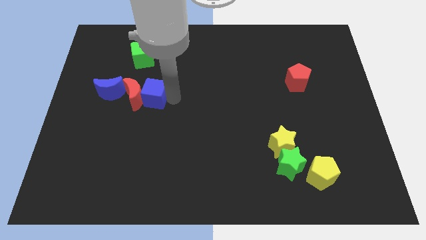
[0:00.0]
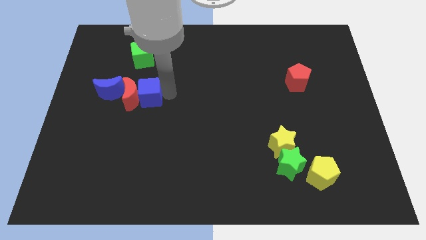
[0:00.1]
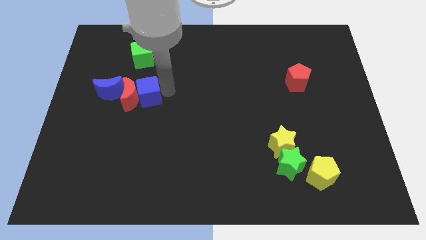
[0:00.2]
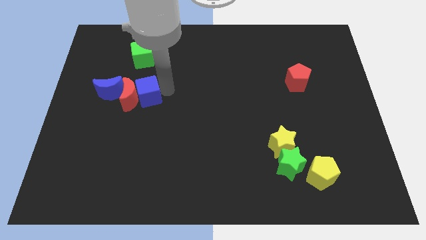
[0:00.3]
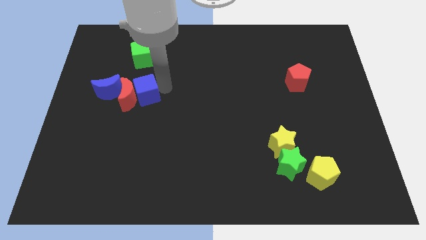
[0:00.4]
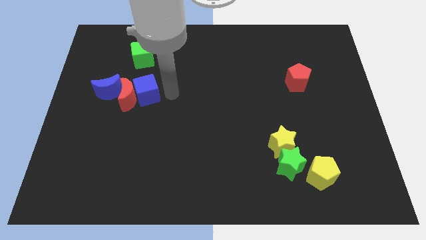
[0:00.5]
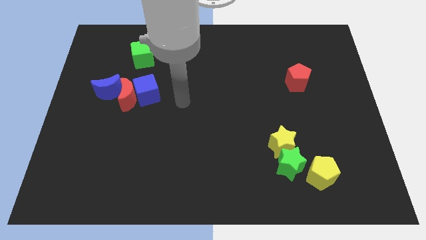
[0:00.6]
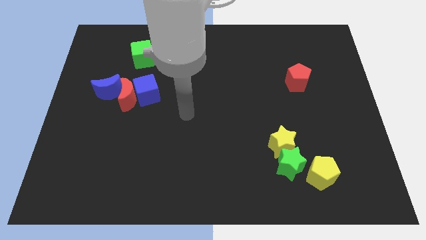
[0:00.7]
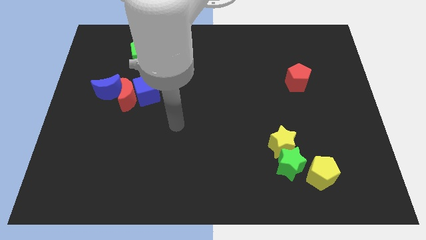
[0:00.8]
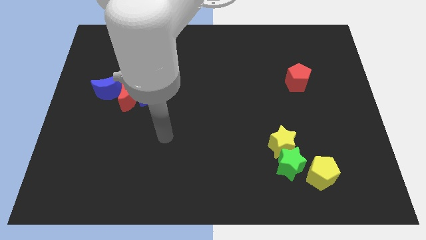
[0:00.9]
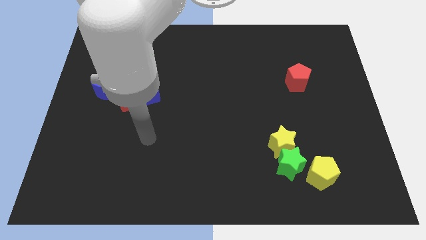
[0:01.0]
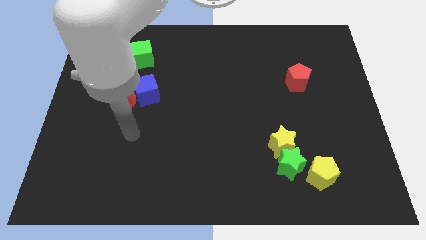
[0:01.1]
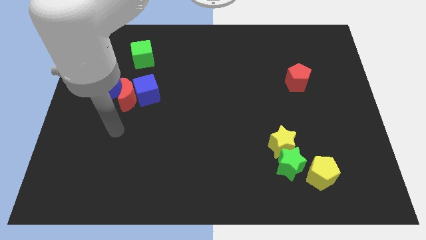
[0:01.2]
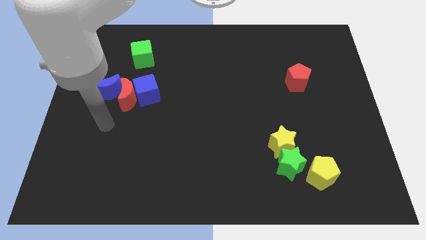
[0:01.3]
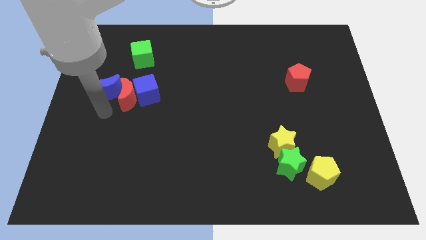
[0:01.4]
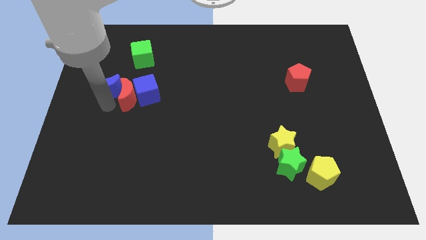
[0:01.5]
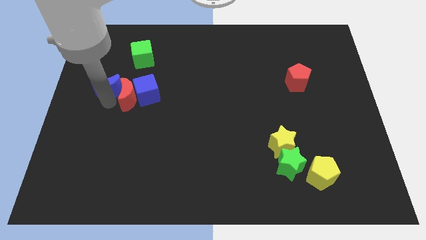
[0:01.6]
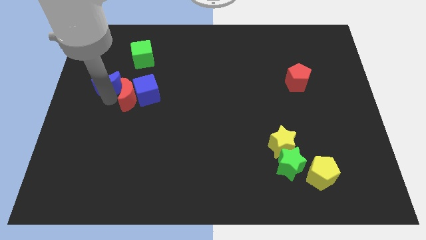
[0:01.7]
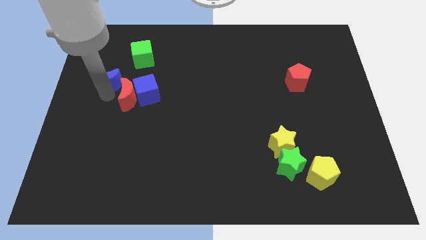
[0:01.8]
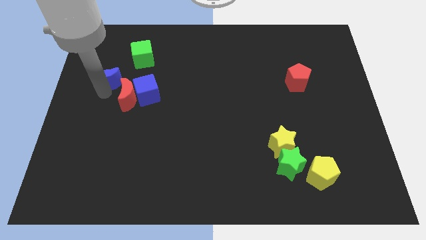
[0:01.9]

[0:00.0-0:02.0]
go near blue moon

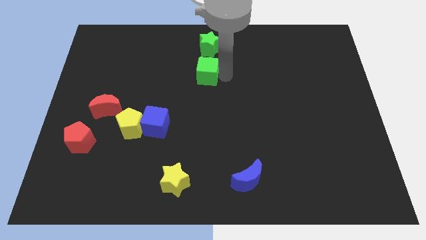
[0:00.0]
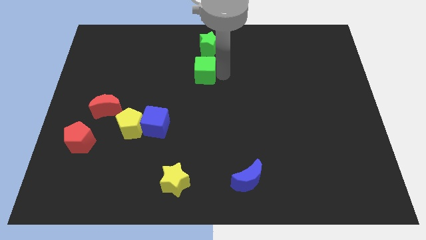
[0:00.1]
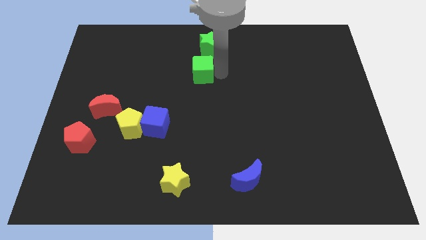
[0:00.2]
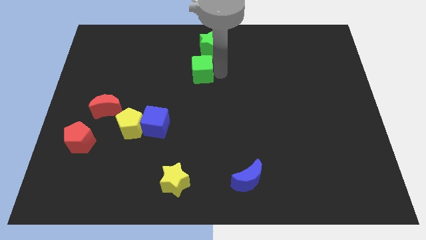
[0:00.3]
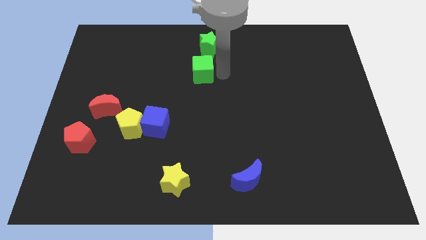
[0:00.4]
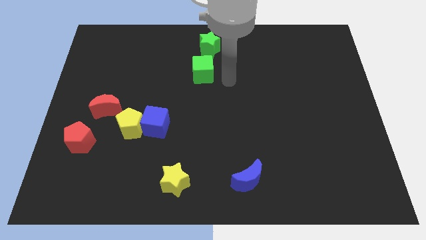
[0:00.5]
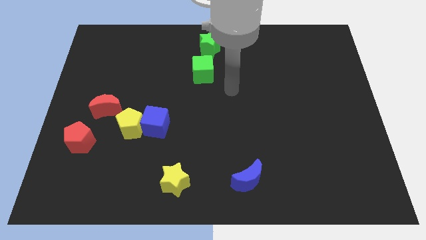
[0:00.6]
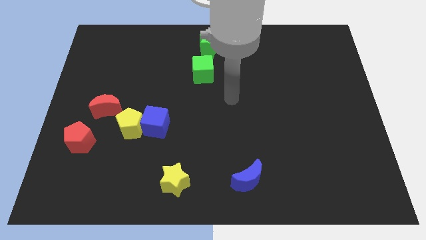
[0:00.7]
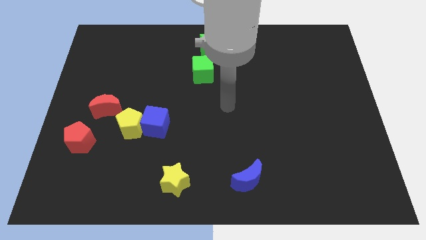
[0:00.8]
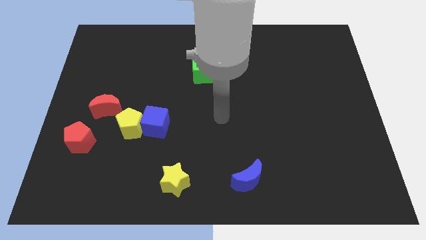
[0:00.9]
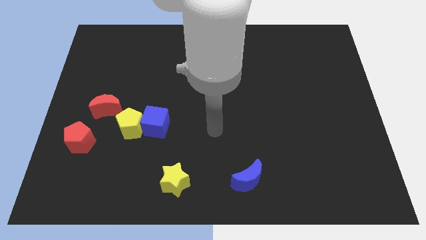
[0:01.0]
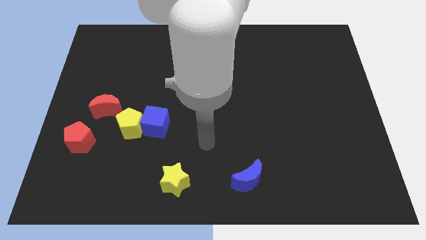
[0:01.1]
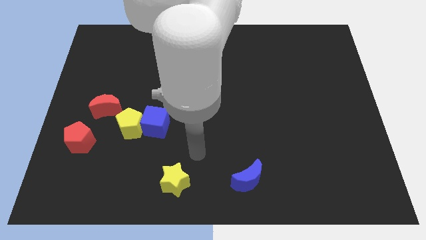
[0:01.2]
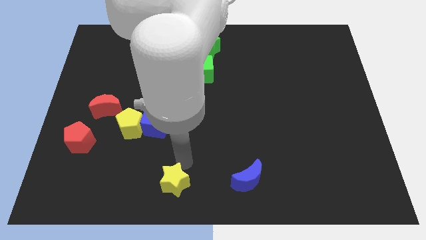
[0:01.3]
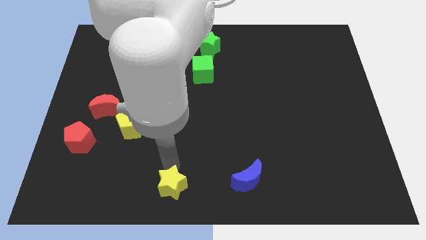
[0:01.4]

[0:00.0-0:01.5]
move your arm away from the green cube

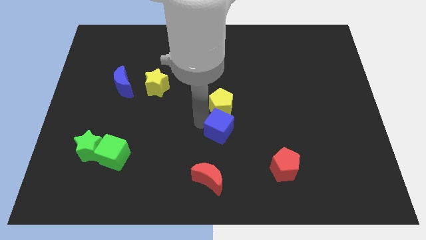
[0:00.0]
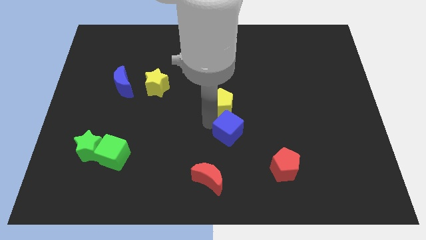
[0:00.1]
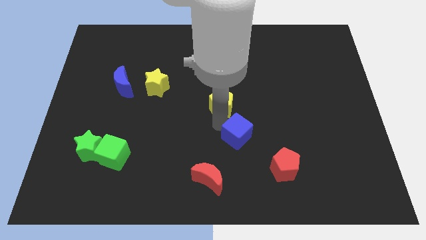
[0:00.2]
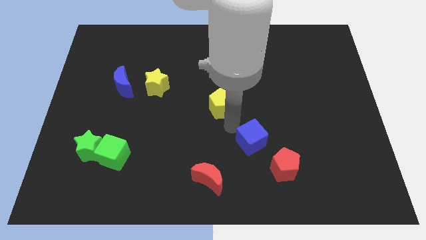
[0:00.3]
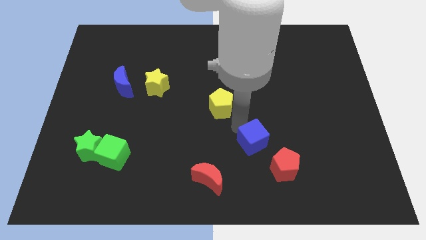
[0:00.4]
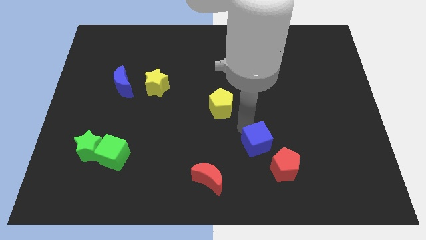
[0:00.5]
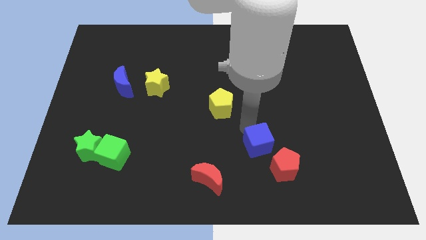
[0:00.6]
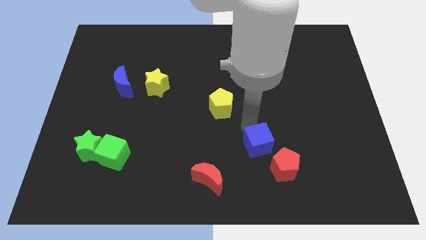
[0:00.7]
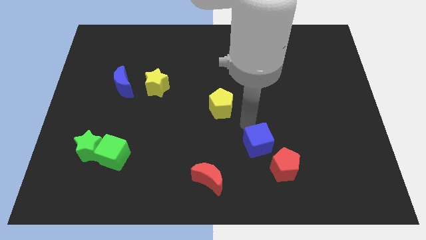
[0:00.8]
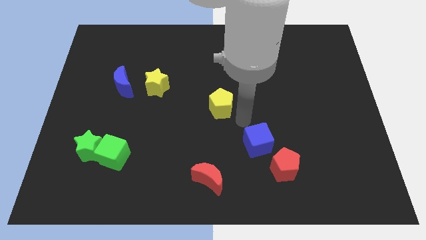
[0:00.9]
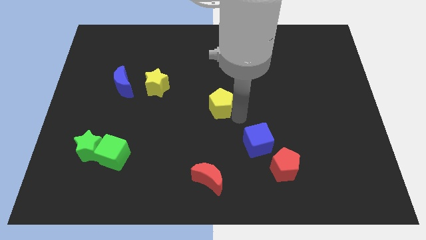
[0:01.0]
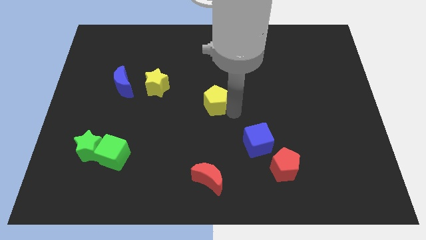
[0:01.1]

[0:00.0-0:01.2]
slide the blue cube to the top left of the red pentagon

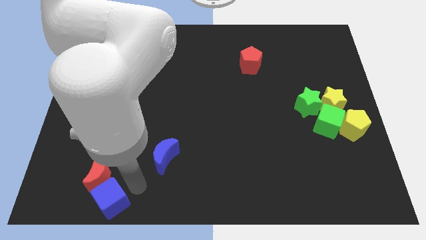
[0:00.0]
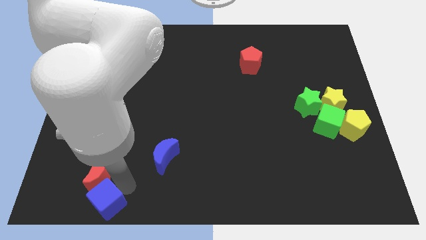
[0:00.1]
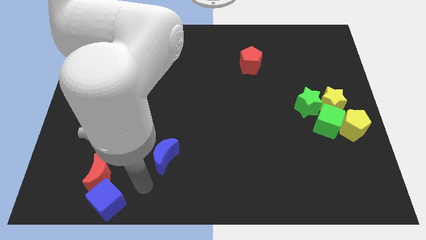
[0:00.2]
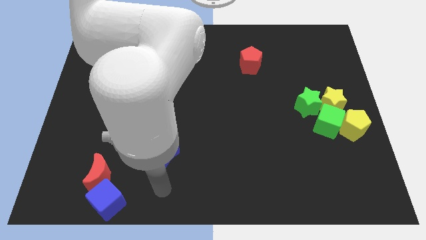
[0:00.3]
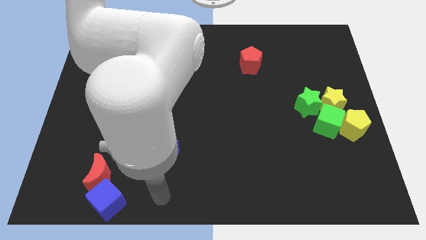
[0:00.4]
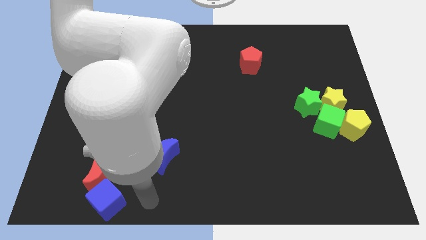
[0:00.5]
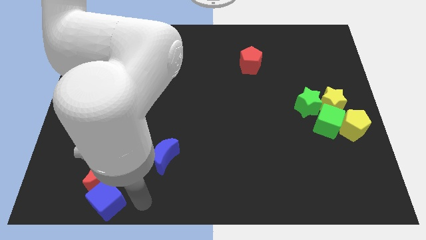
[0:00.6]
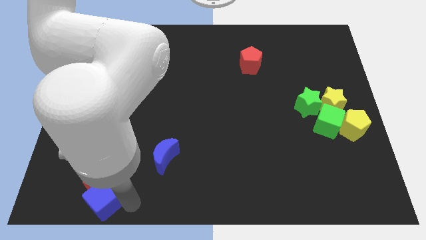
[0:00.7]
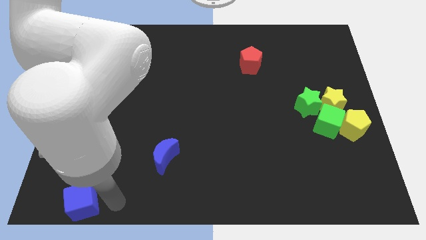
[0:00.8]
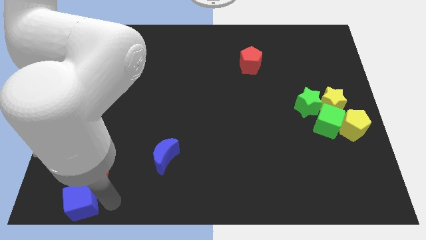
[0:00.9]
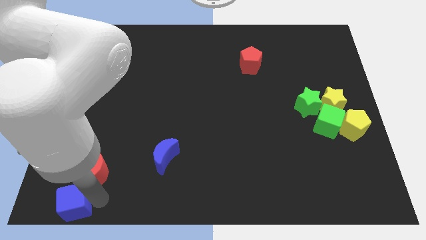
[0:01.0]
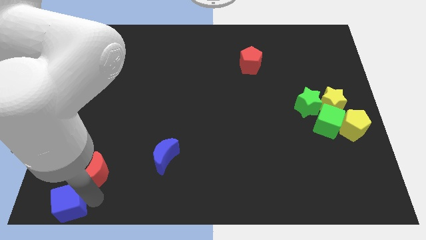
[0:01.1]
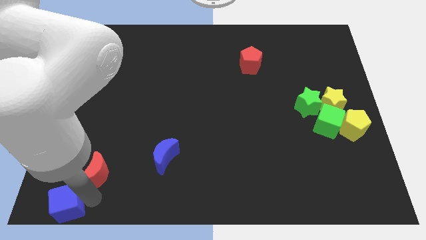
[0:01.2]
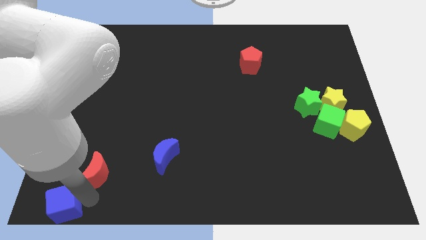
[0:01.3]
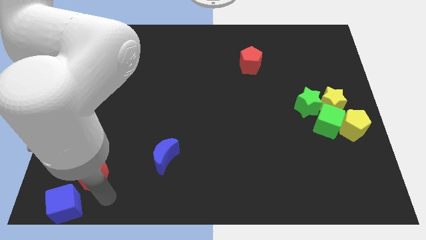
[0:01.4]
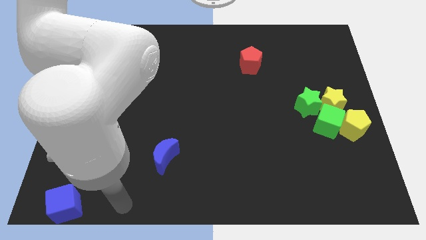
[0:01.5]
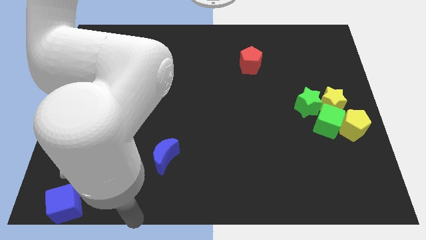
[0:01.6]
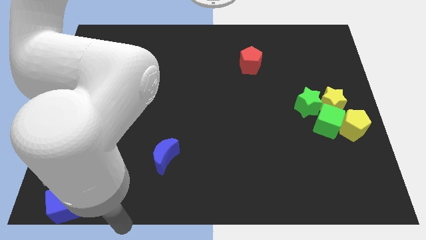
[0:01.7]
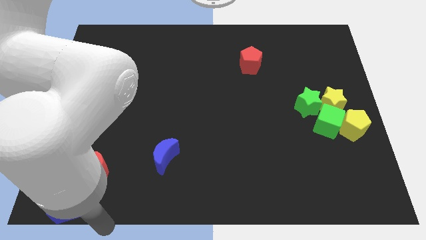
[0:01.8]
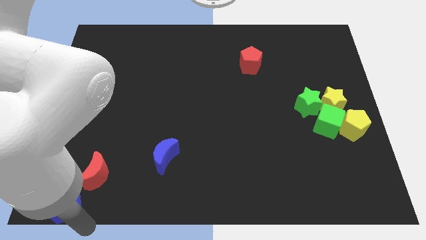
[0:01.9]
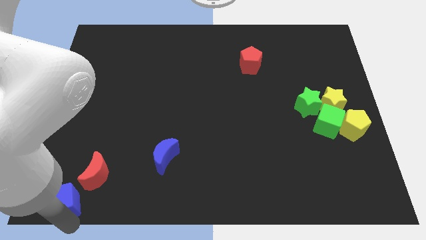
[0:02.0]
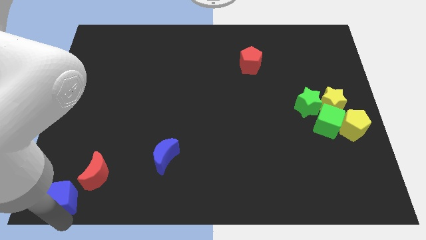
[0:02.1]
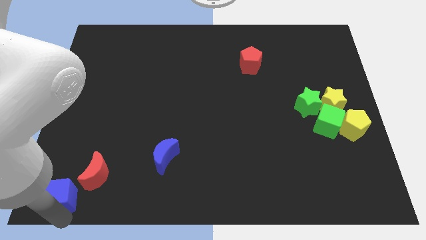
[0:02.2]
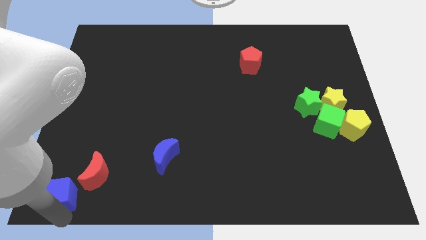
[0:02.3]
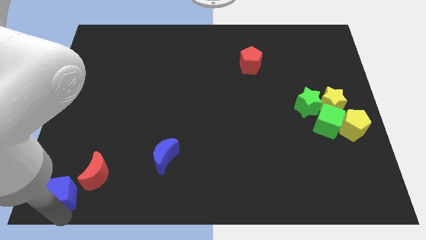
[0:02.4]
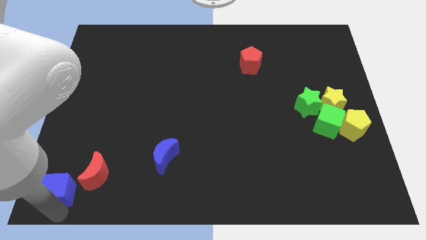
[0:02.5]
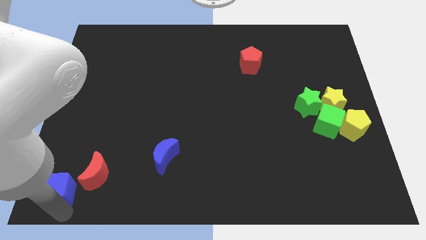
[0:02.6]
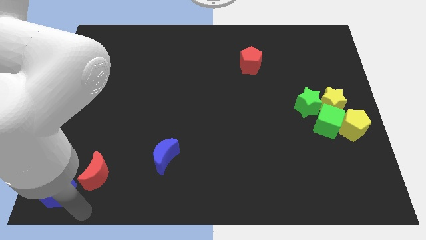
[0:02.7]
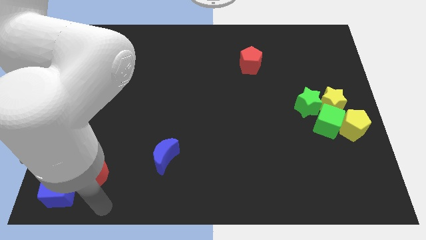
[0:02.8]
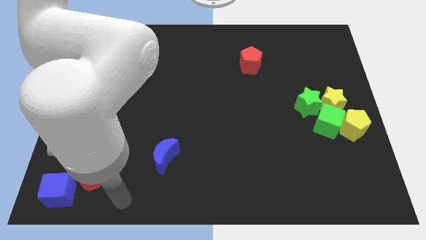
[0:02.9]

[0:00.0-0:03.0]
place the blue cube at the bottom left

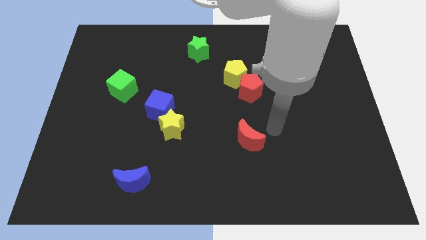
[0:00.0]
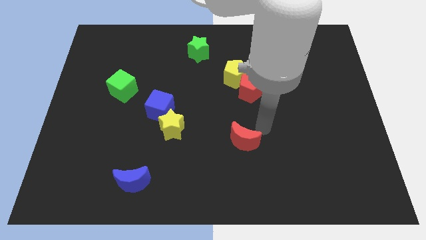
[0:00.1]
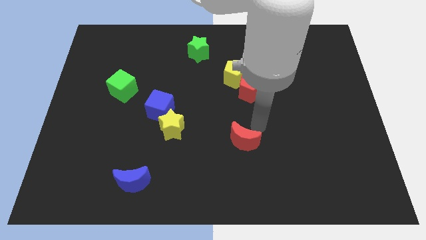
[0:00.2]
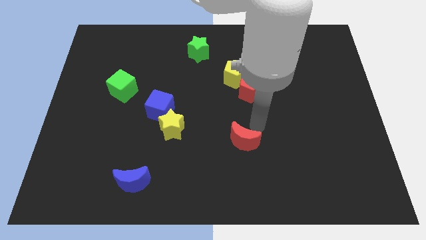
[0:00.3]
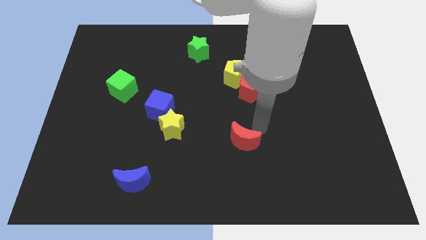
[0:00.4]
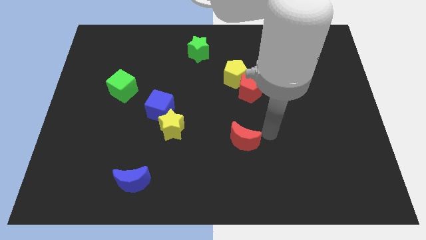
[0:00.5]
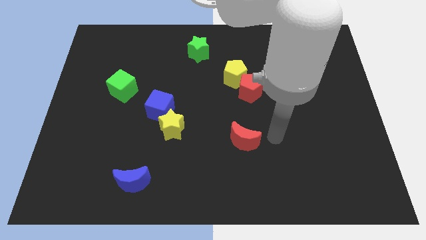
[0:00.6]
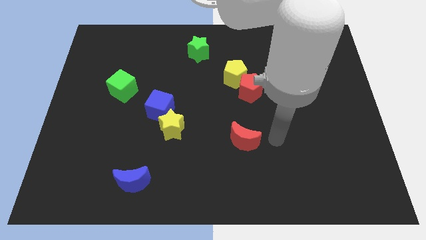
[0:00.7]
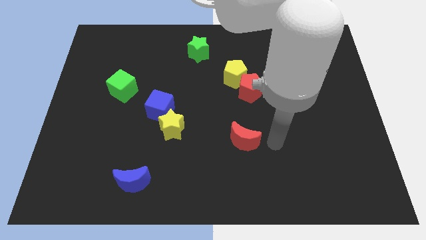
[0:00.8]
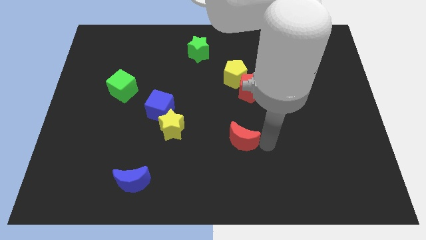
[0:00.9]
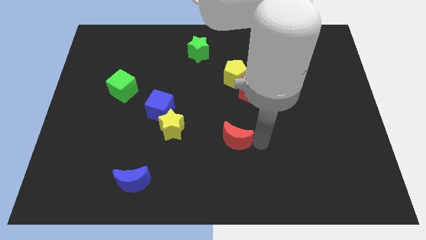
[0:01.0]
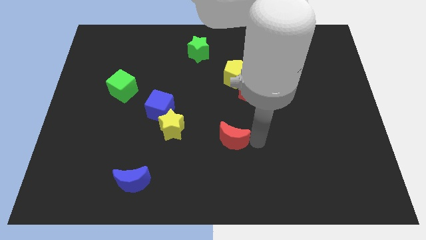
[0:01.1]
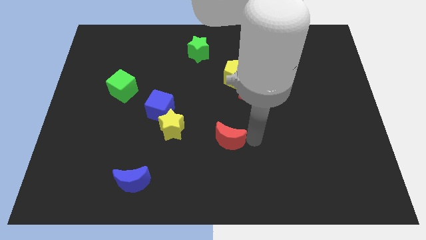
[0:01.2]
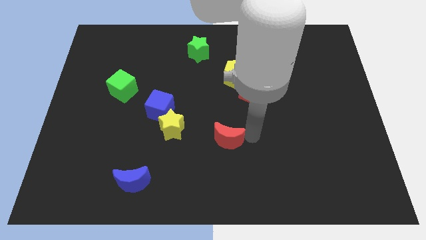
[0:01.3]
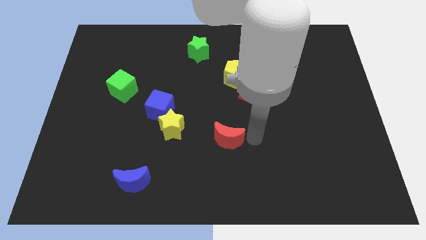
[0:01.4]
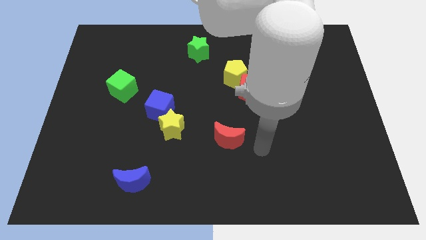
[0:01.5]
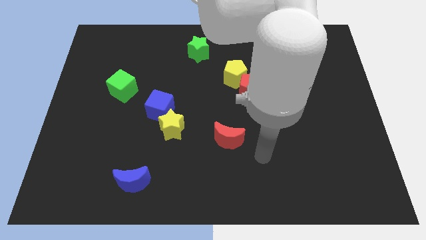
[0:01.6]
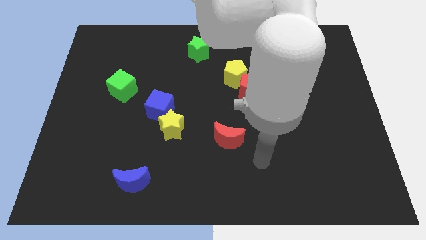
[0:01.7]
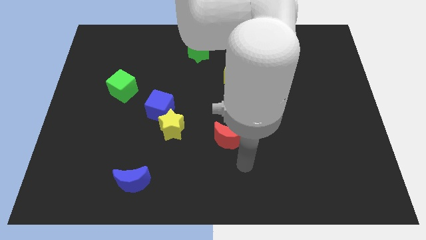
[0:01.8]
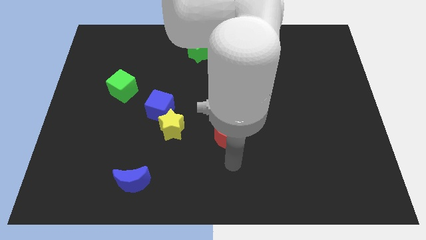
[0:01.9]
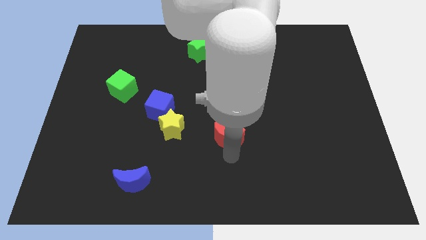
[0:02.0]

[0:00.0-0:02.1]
place the red moon parallel to yellow star
